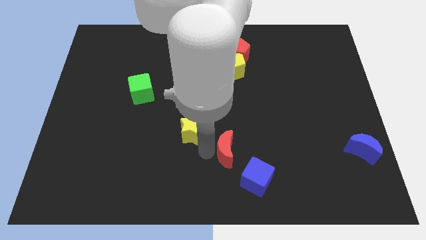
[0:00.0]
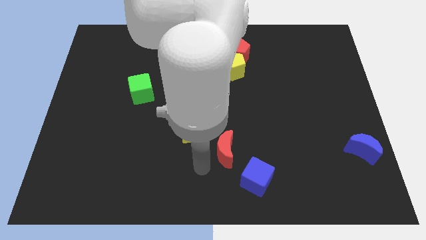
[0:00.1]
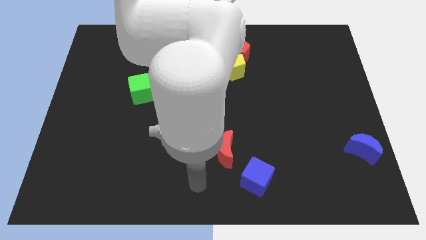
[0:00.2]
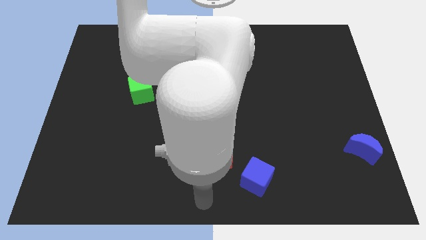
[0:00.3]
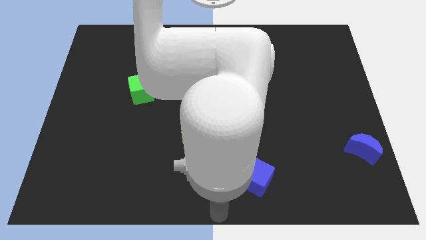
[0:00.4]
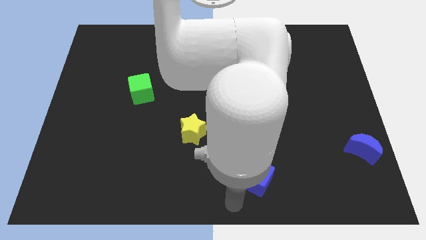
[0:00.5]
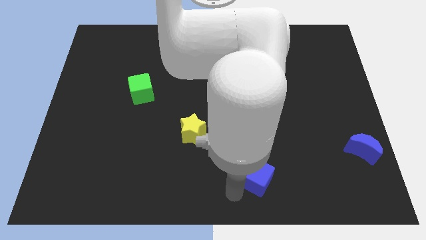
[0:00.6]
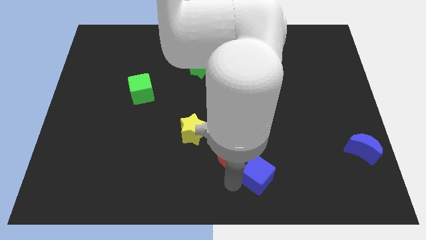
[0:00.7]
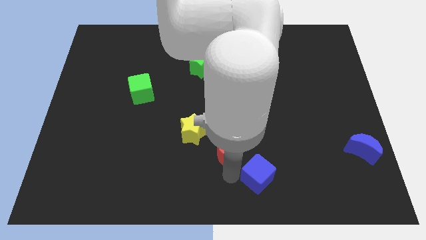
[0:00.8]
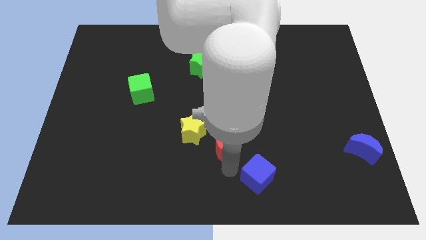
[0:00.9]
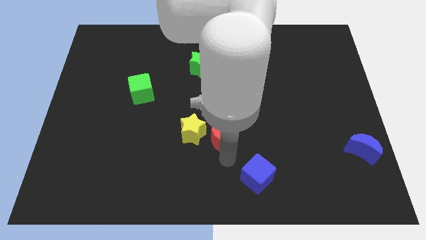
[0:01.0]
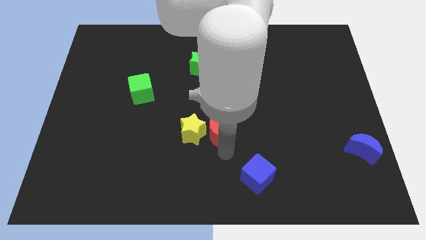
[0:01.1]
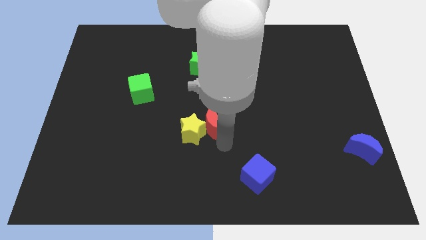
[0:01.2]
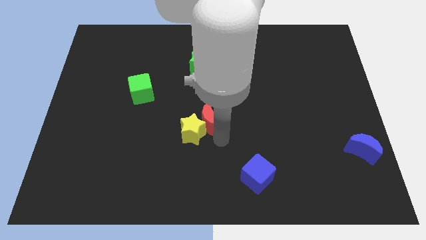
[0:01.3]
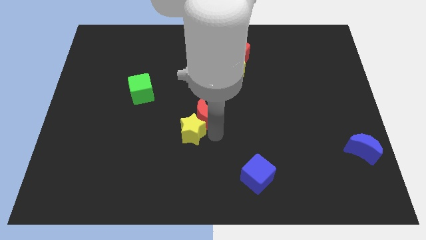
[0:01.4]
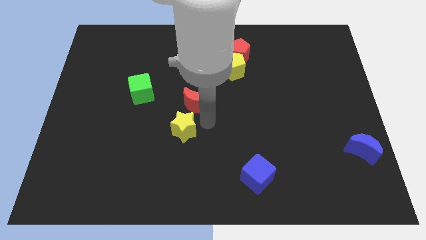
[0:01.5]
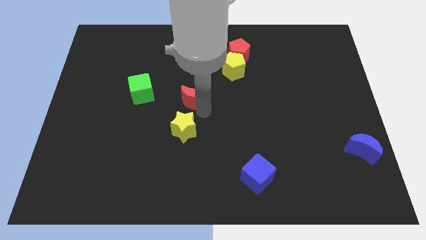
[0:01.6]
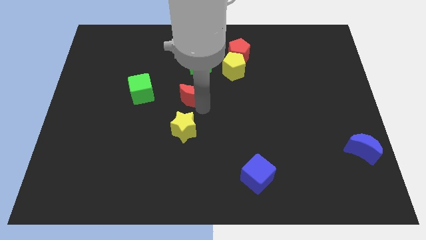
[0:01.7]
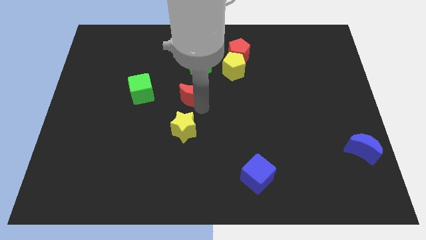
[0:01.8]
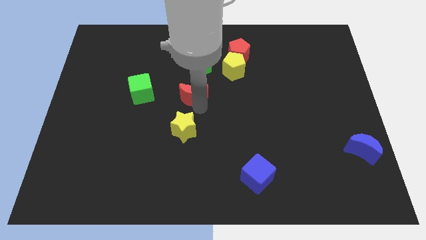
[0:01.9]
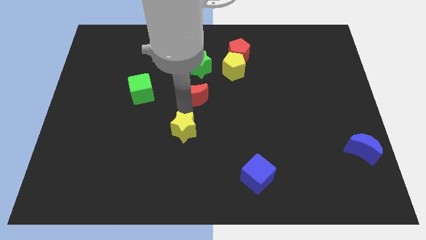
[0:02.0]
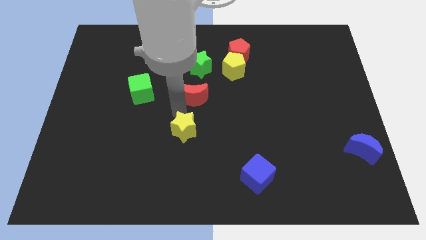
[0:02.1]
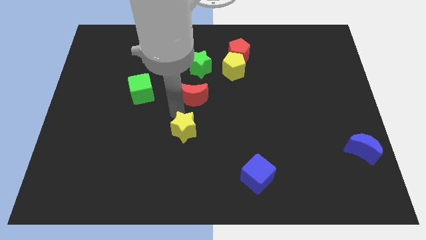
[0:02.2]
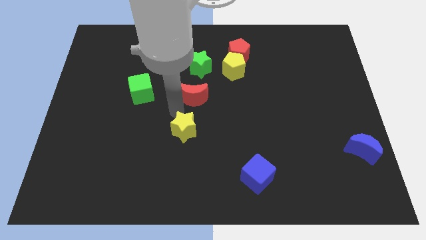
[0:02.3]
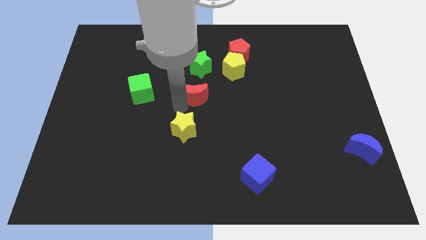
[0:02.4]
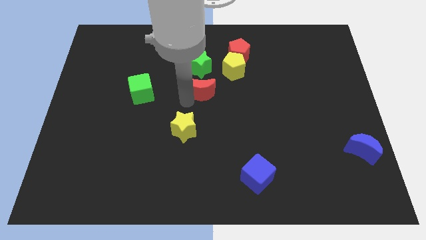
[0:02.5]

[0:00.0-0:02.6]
put the red moon below the green star

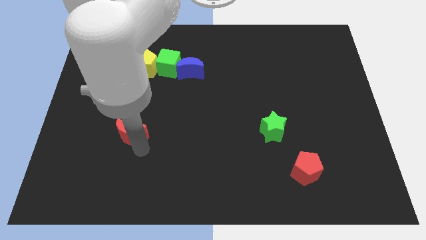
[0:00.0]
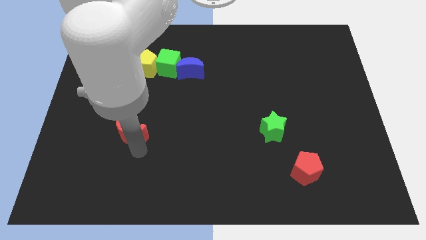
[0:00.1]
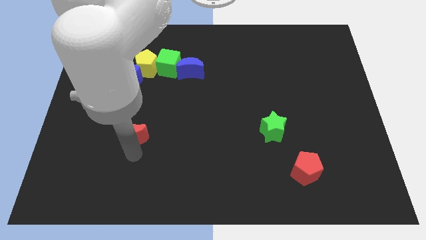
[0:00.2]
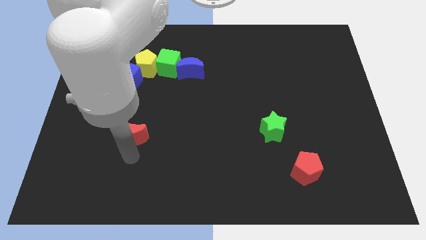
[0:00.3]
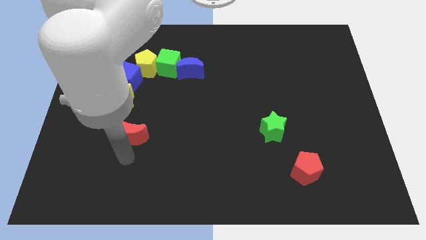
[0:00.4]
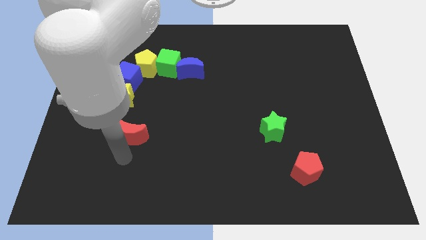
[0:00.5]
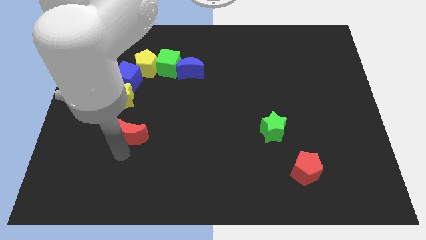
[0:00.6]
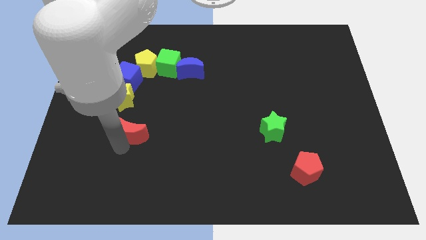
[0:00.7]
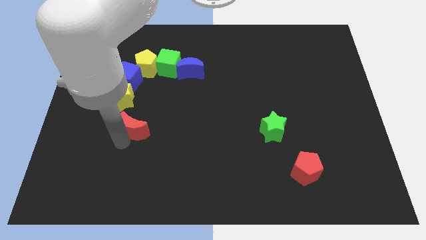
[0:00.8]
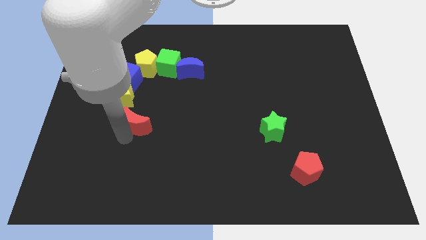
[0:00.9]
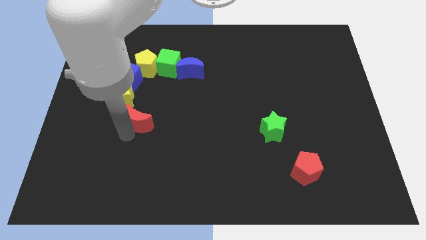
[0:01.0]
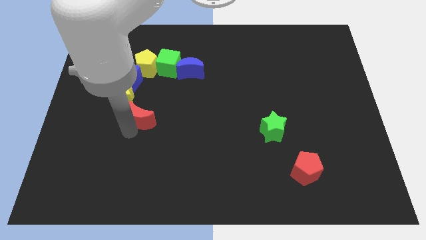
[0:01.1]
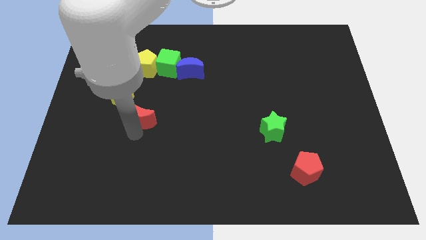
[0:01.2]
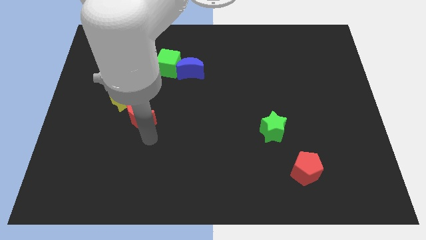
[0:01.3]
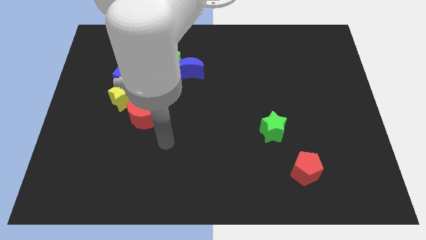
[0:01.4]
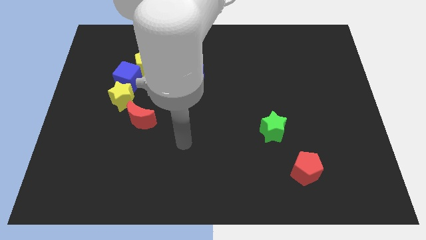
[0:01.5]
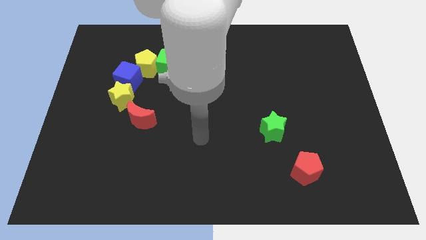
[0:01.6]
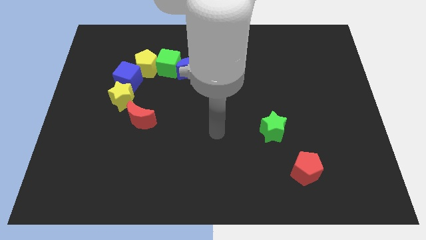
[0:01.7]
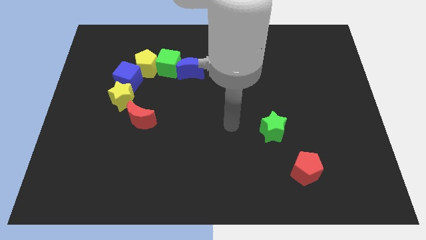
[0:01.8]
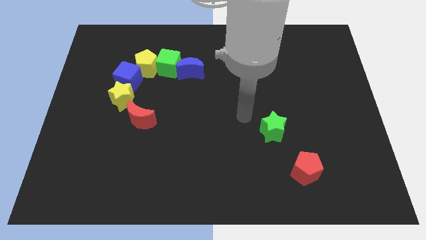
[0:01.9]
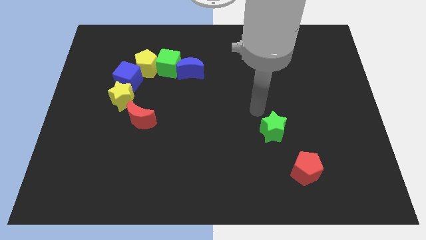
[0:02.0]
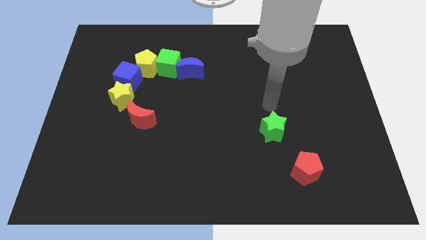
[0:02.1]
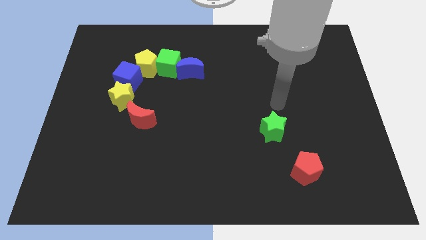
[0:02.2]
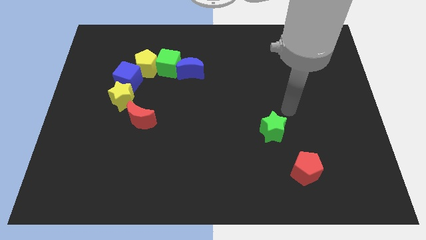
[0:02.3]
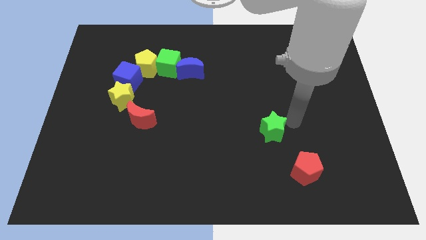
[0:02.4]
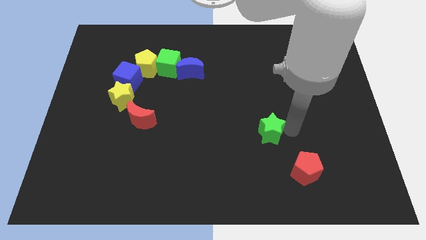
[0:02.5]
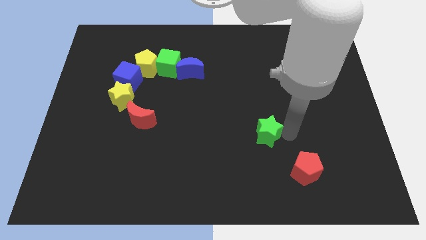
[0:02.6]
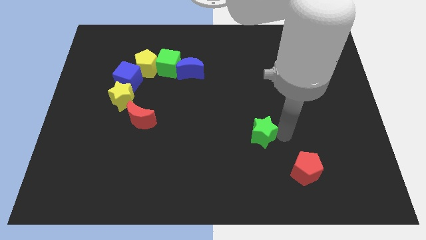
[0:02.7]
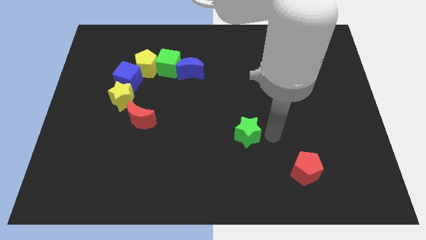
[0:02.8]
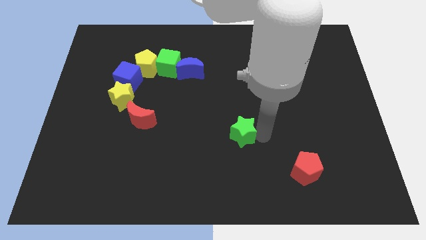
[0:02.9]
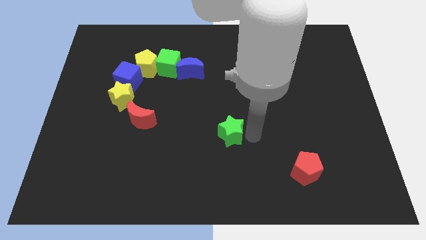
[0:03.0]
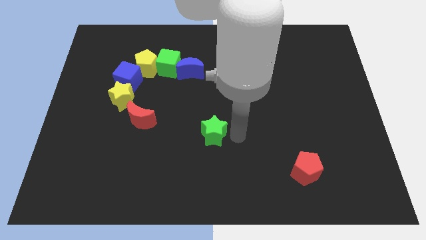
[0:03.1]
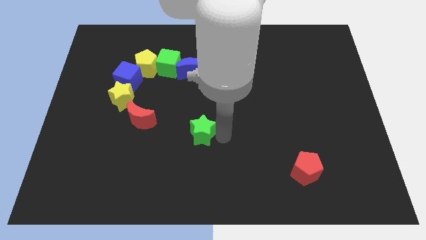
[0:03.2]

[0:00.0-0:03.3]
drag the green star to the center

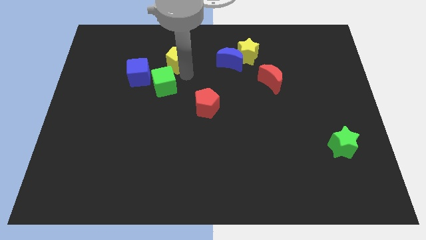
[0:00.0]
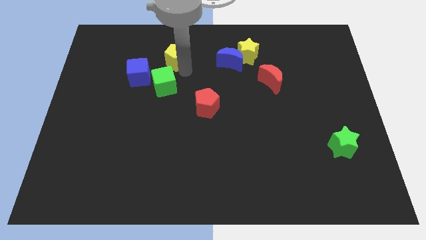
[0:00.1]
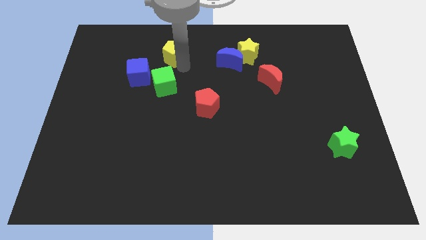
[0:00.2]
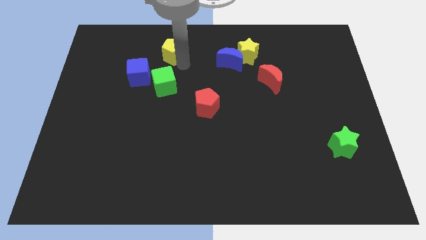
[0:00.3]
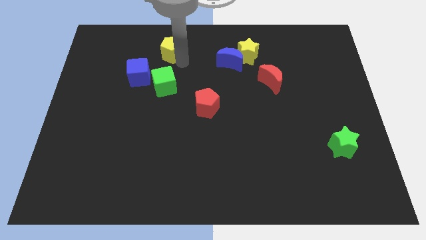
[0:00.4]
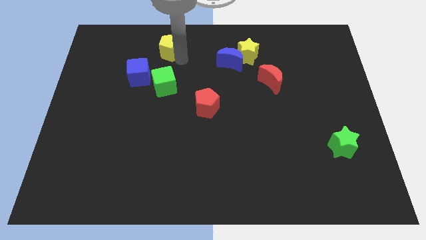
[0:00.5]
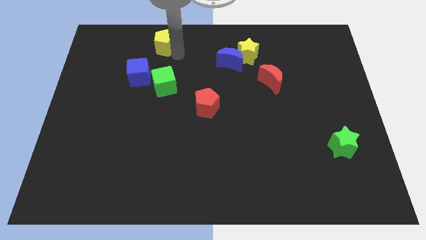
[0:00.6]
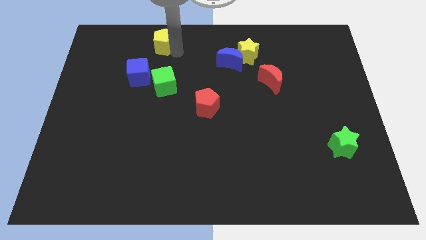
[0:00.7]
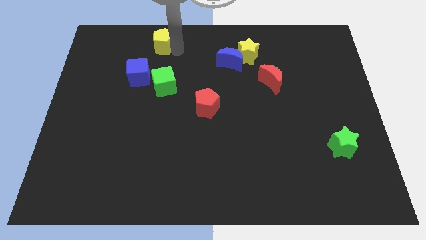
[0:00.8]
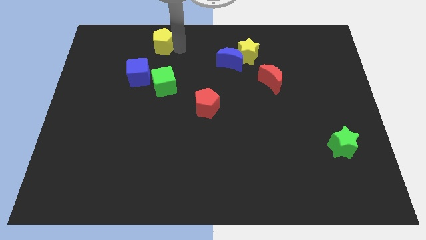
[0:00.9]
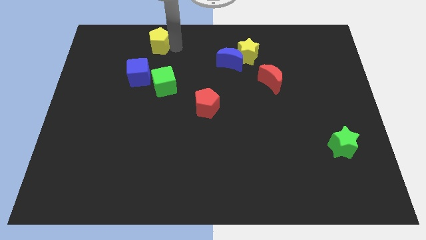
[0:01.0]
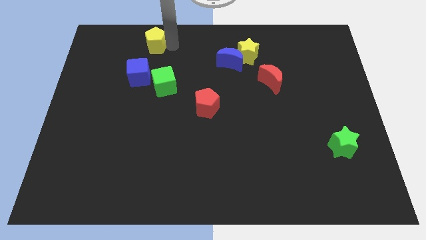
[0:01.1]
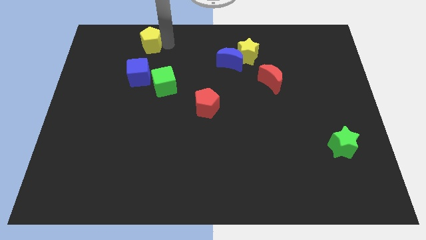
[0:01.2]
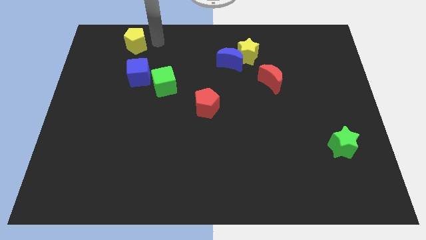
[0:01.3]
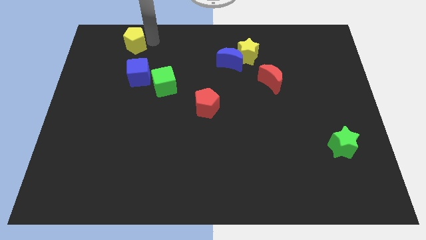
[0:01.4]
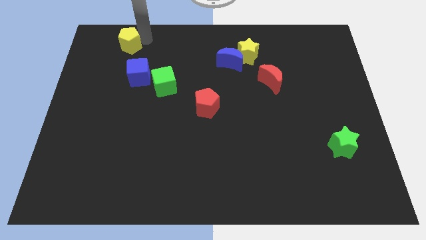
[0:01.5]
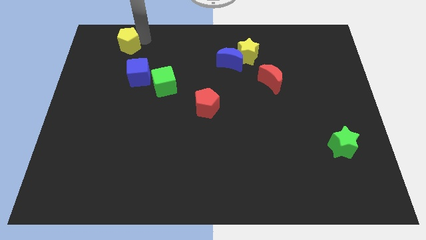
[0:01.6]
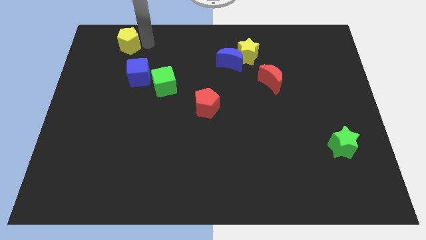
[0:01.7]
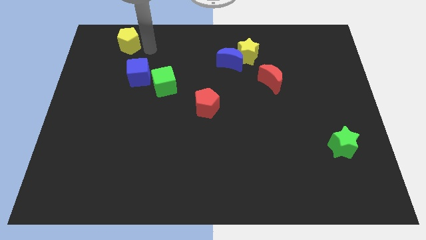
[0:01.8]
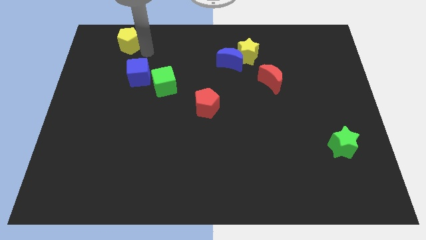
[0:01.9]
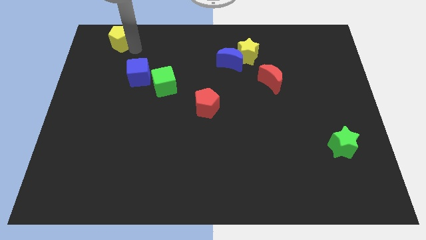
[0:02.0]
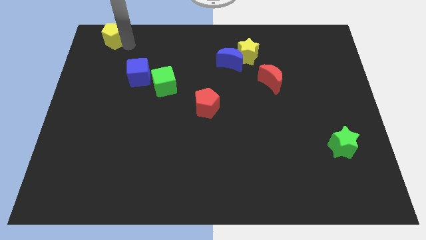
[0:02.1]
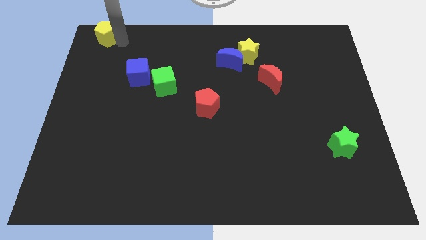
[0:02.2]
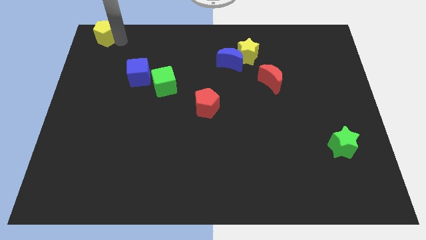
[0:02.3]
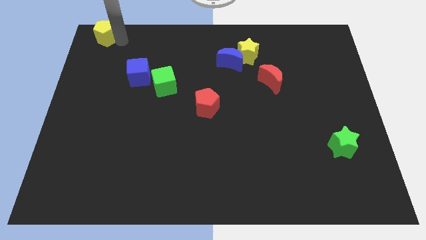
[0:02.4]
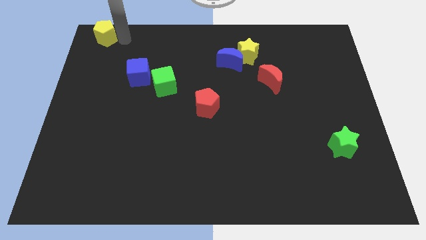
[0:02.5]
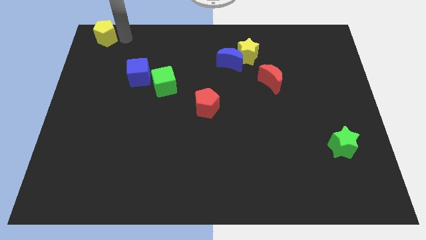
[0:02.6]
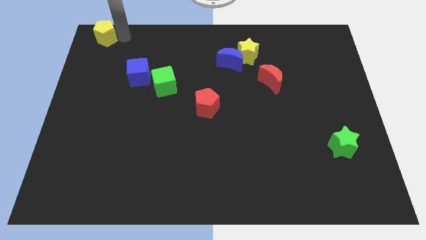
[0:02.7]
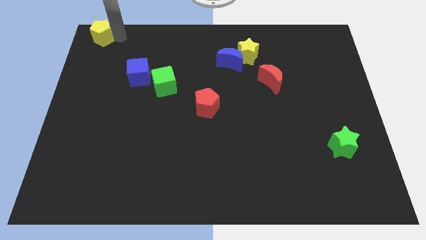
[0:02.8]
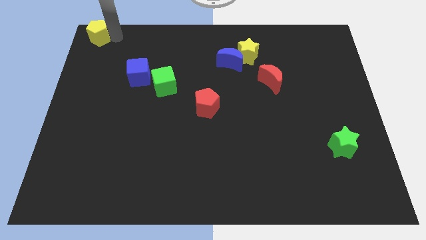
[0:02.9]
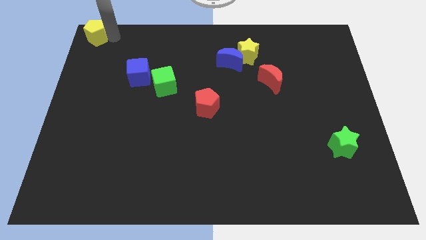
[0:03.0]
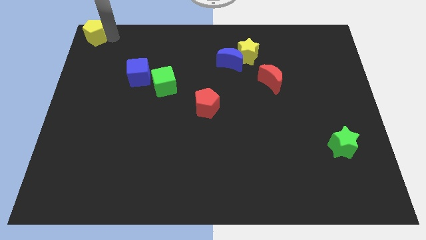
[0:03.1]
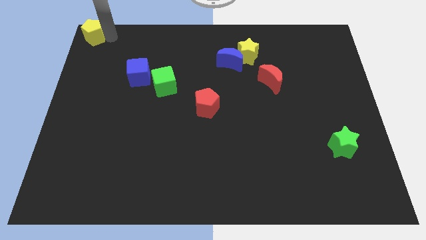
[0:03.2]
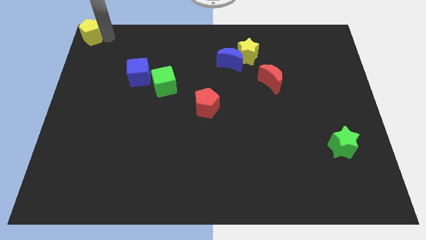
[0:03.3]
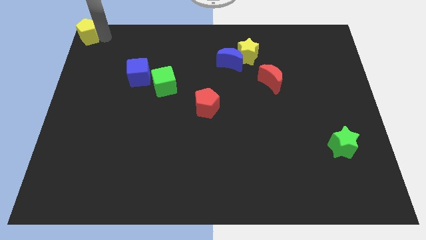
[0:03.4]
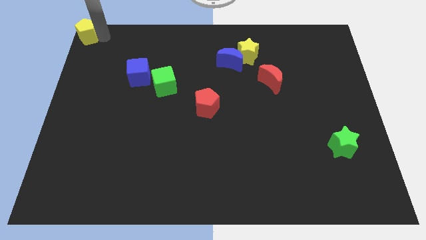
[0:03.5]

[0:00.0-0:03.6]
place the yellow pentagon at top left corner of the board
